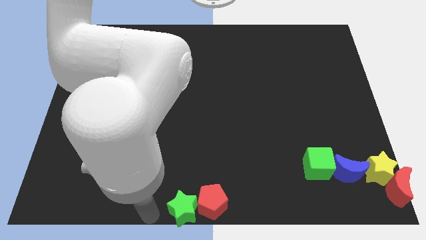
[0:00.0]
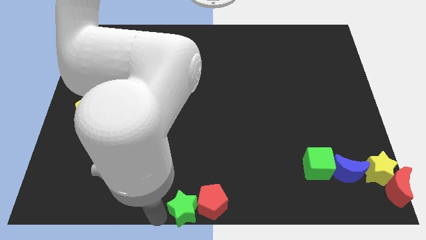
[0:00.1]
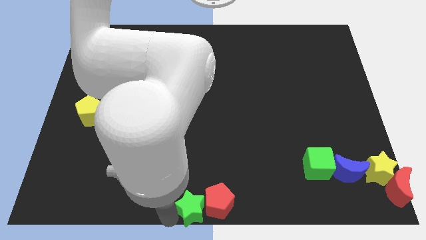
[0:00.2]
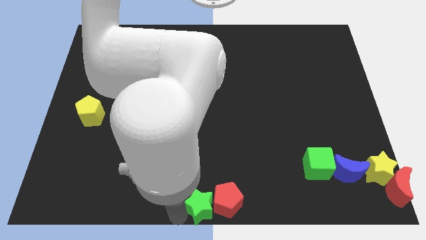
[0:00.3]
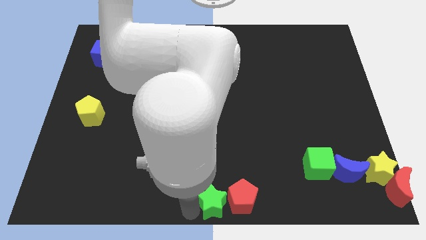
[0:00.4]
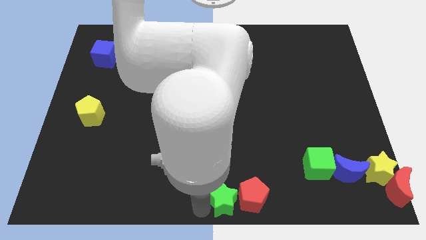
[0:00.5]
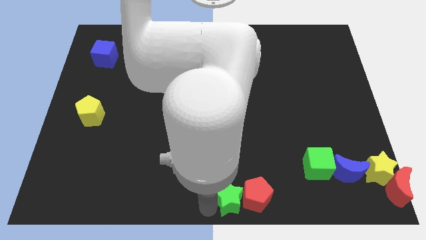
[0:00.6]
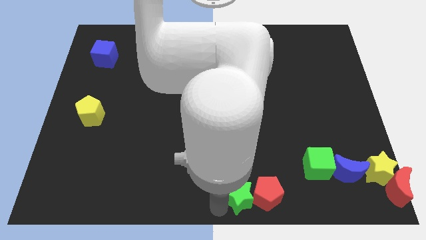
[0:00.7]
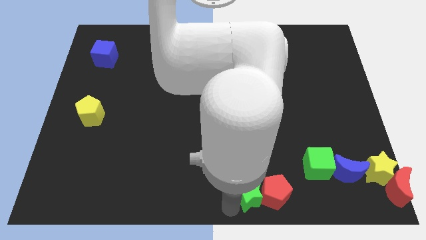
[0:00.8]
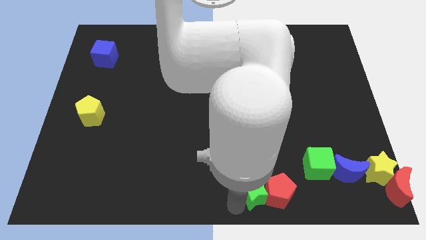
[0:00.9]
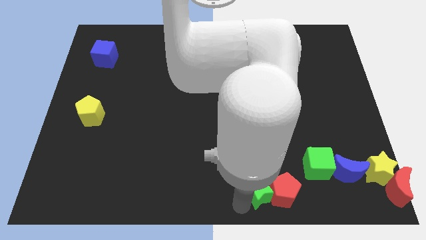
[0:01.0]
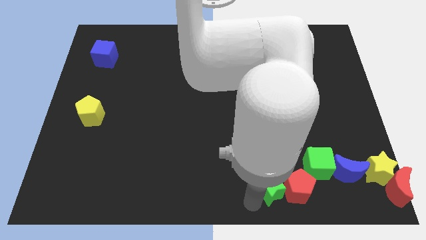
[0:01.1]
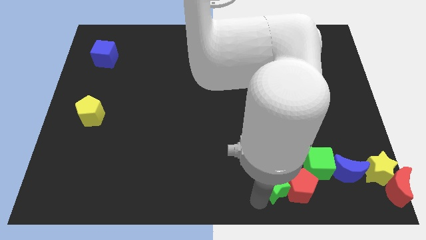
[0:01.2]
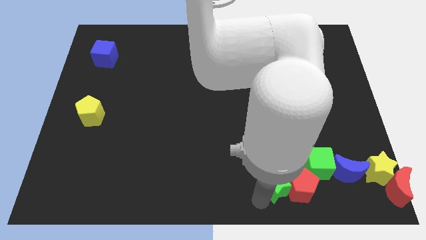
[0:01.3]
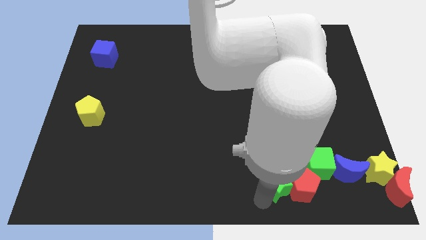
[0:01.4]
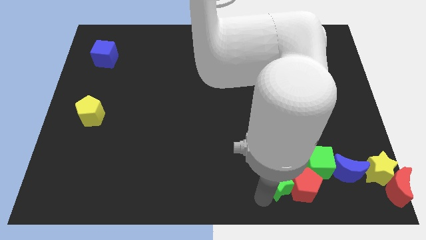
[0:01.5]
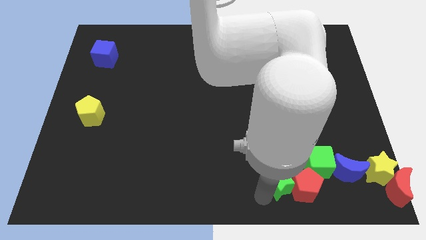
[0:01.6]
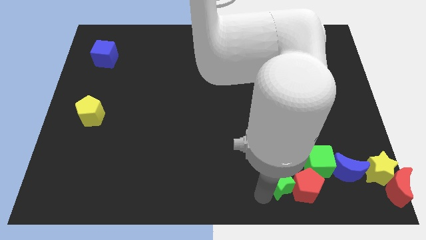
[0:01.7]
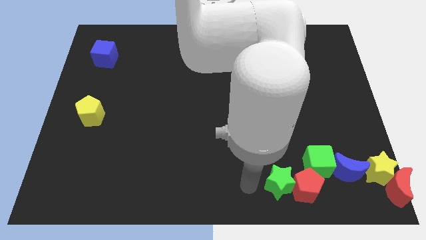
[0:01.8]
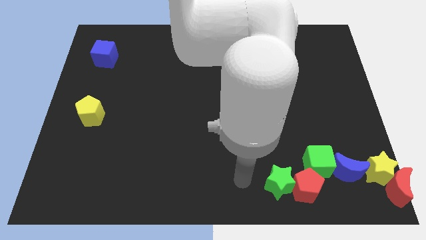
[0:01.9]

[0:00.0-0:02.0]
push the green star and red pentagon to the left of green cube

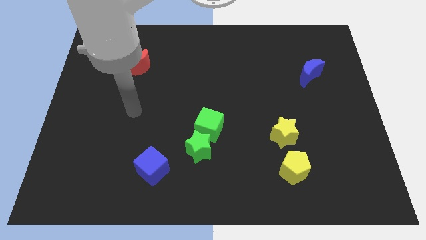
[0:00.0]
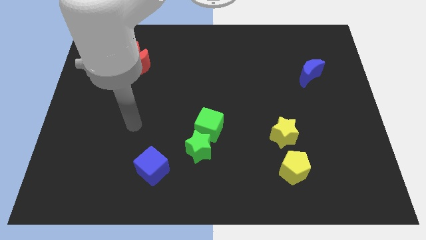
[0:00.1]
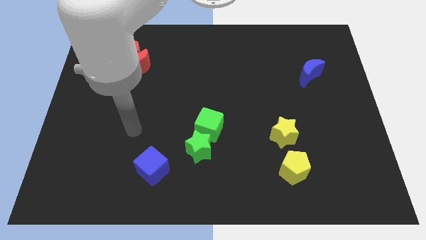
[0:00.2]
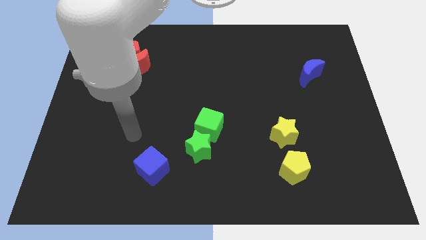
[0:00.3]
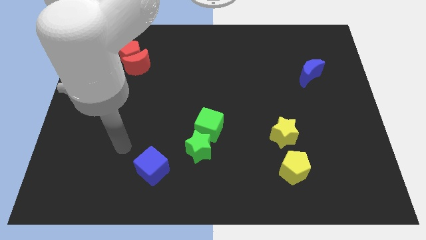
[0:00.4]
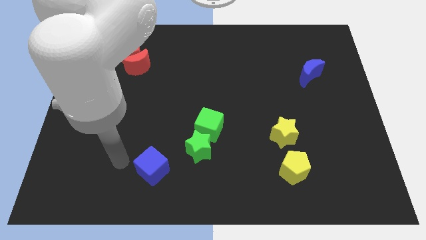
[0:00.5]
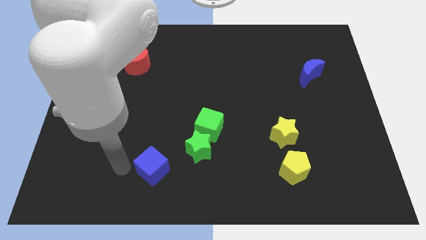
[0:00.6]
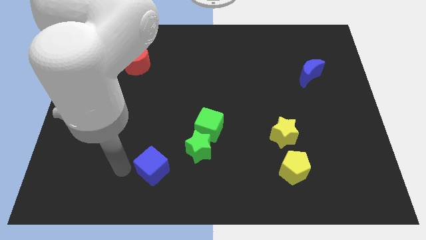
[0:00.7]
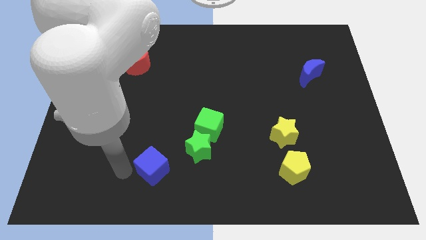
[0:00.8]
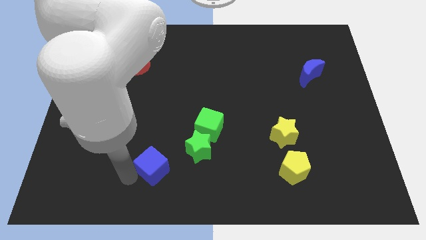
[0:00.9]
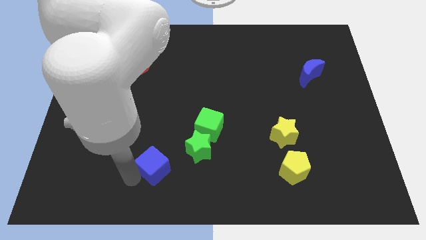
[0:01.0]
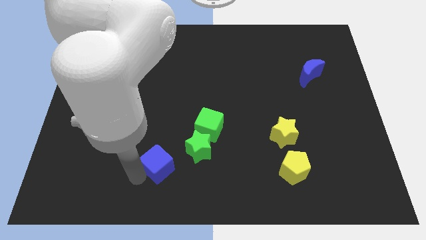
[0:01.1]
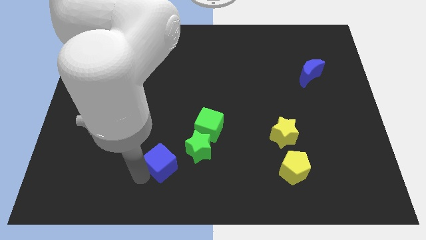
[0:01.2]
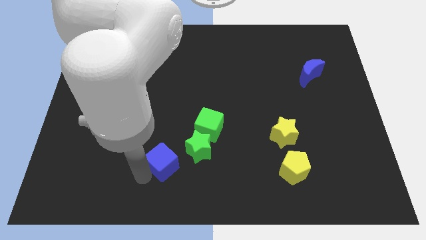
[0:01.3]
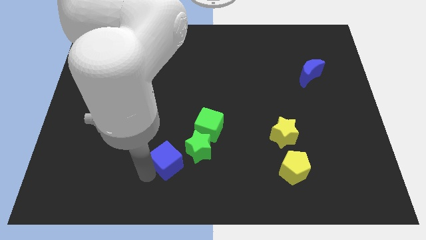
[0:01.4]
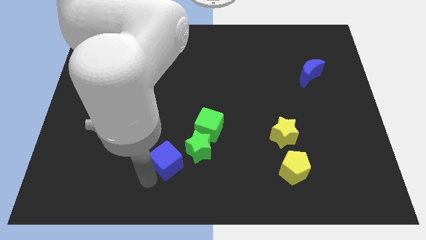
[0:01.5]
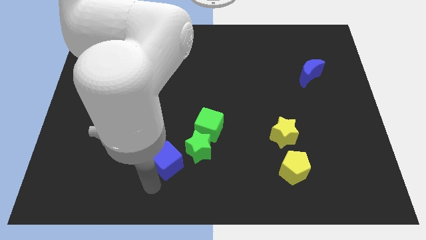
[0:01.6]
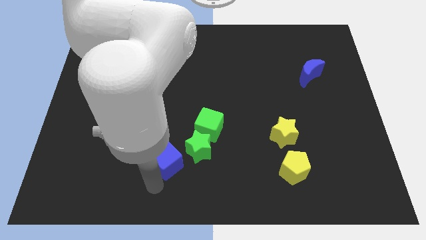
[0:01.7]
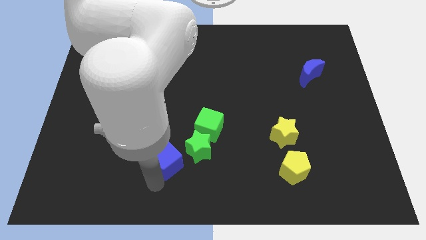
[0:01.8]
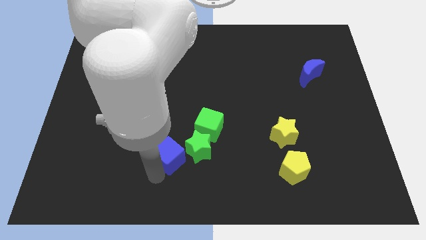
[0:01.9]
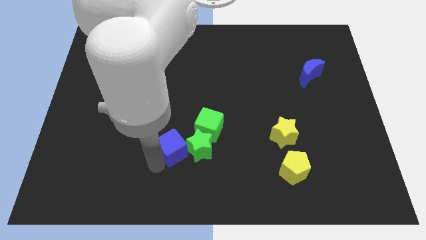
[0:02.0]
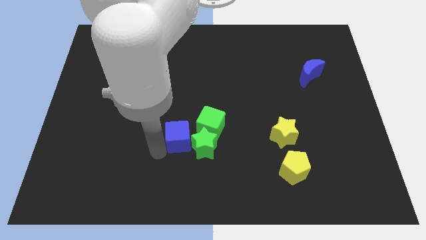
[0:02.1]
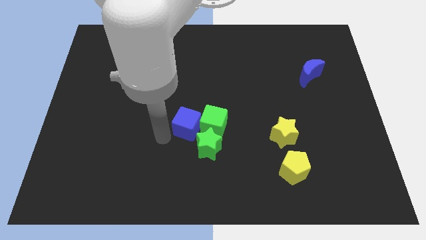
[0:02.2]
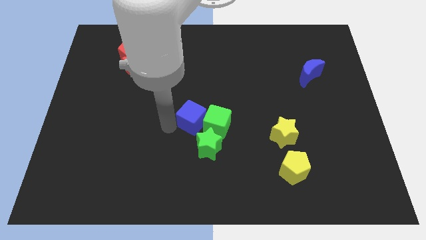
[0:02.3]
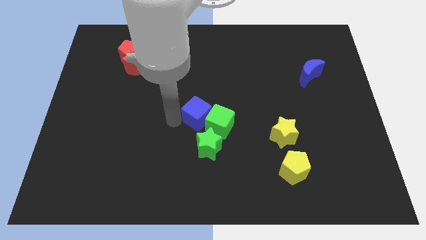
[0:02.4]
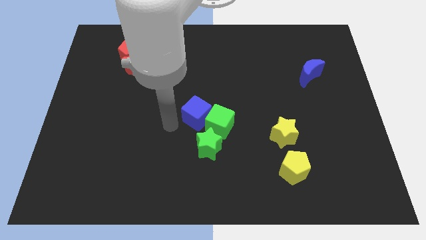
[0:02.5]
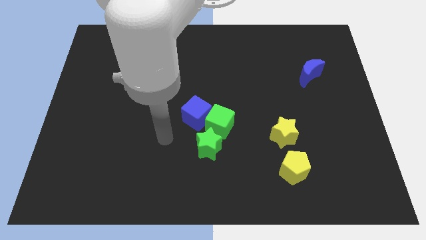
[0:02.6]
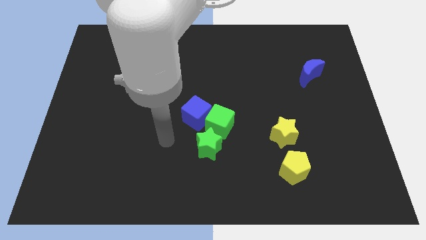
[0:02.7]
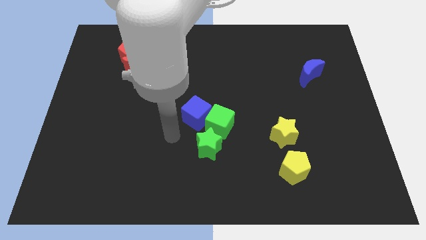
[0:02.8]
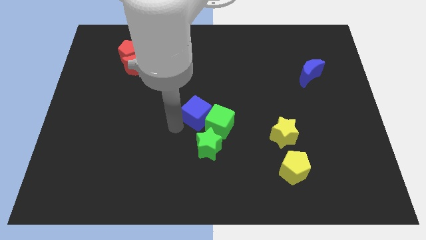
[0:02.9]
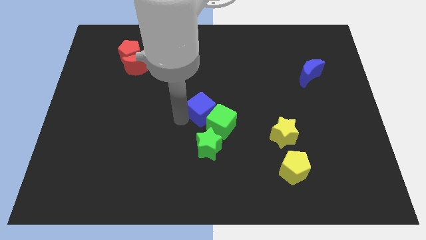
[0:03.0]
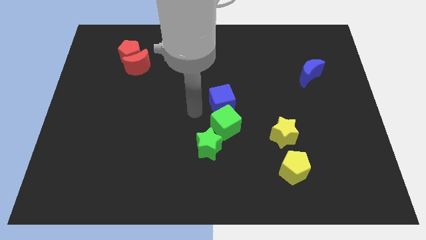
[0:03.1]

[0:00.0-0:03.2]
push blue cube into the green cube

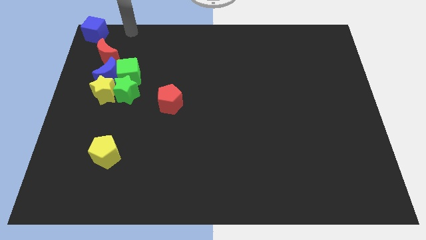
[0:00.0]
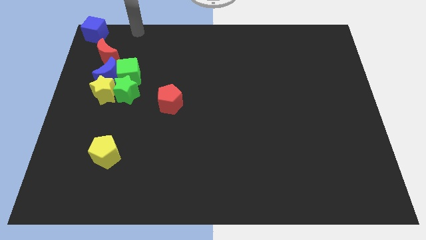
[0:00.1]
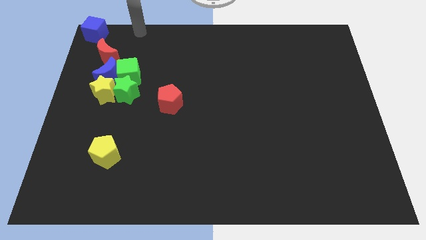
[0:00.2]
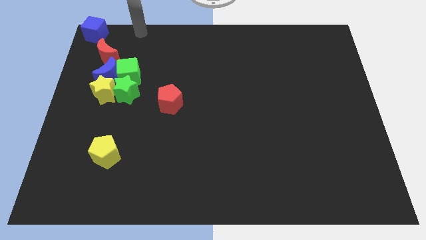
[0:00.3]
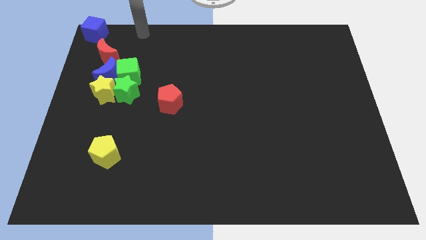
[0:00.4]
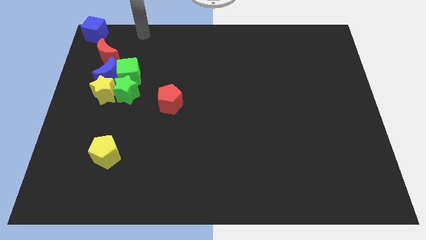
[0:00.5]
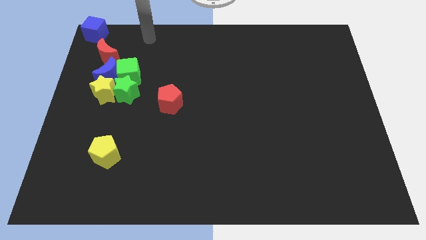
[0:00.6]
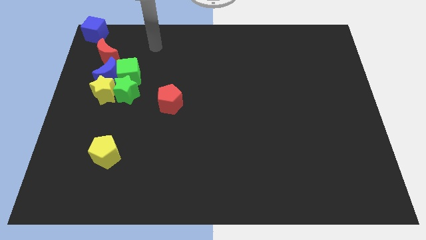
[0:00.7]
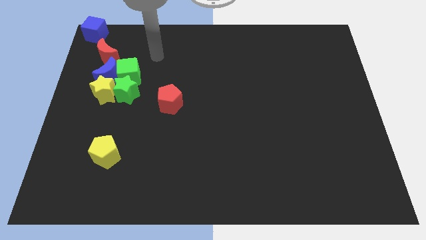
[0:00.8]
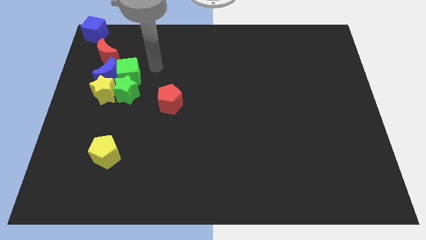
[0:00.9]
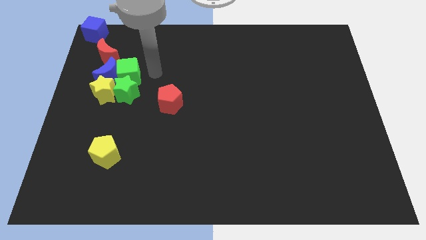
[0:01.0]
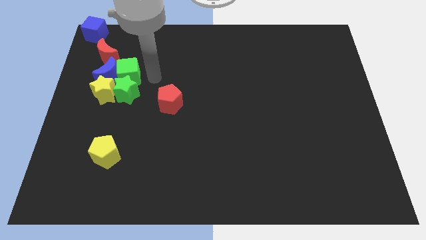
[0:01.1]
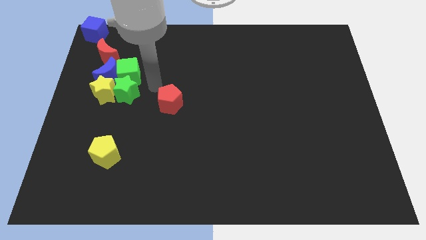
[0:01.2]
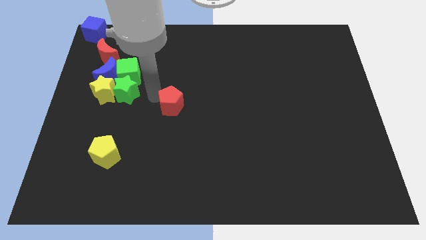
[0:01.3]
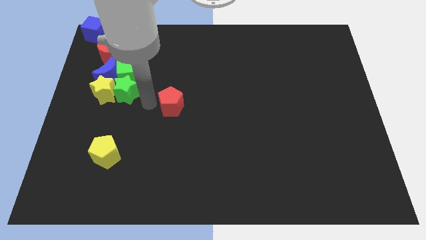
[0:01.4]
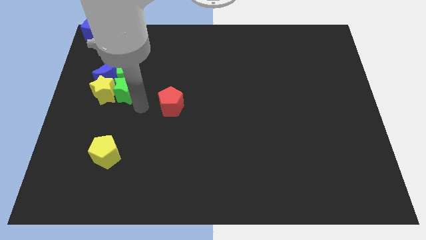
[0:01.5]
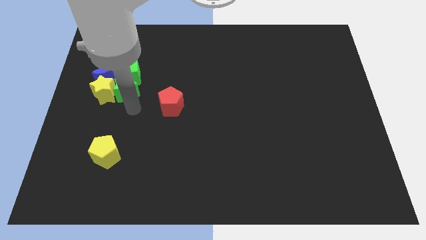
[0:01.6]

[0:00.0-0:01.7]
touch your arm to the left of red pentagon

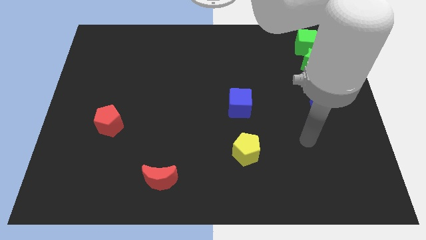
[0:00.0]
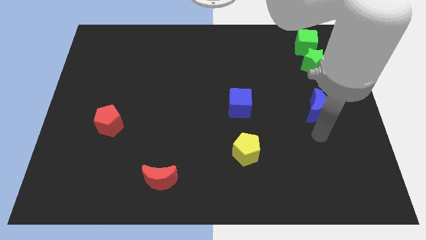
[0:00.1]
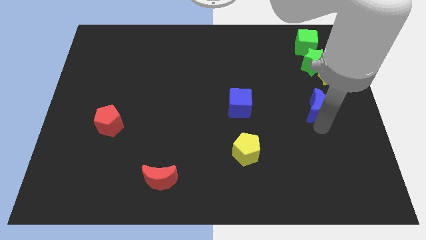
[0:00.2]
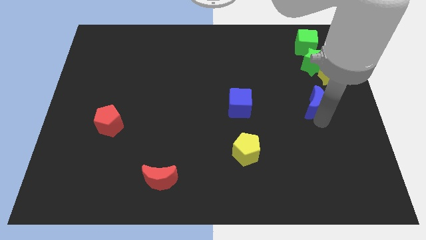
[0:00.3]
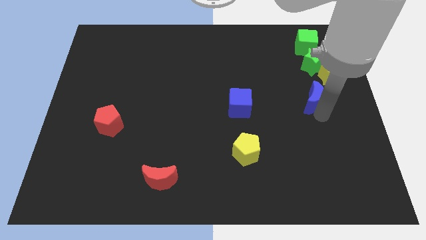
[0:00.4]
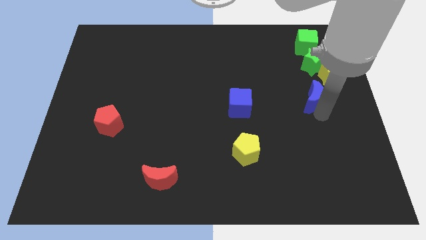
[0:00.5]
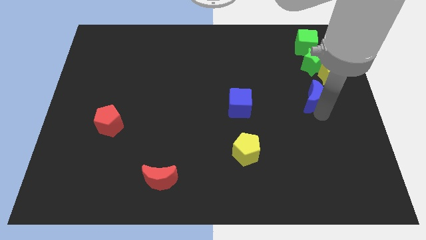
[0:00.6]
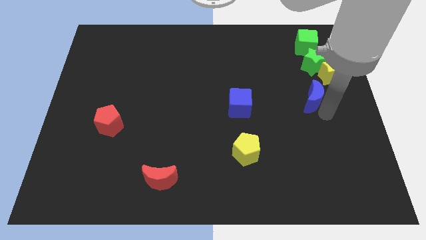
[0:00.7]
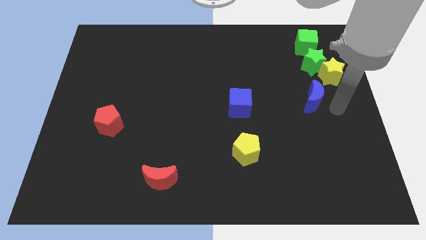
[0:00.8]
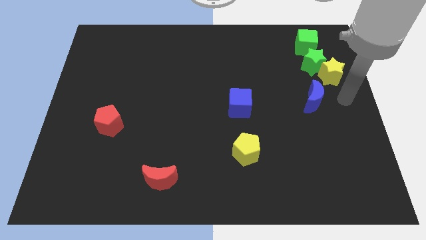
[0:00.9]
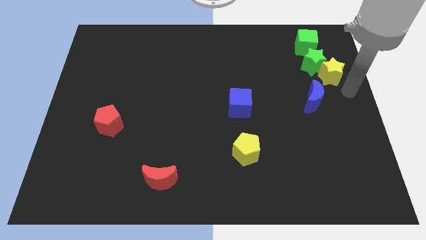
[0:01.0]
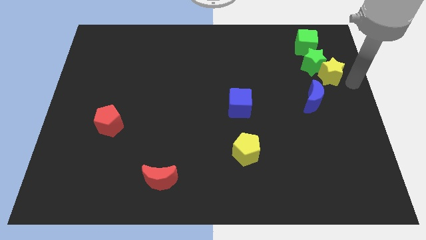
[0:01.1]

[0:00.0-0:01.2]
move the blue crescent slightly upwards

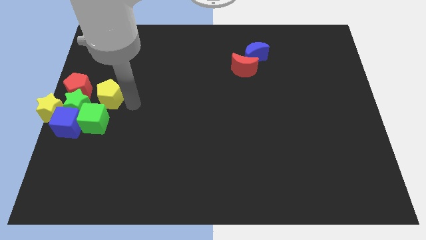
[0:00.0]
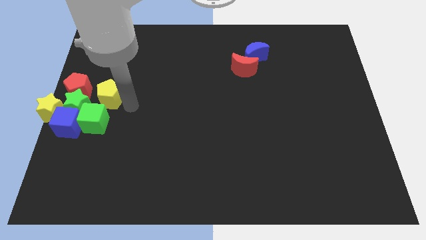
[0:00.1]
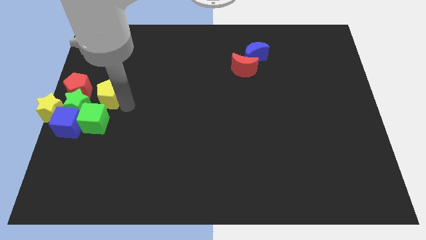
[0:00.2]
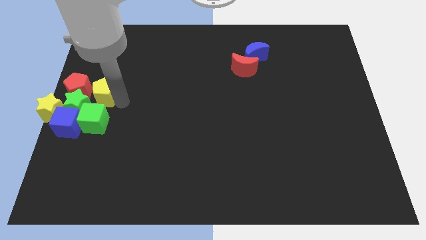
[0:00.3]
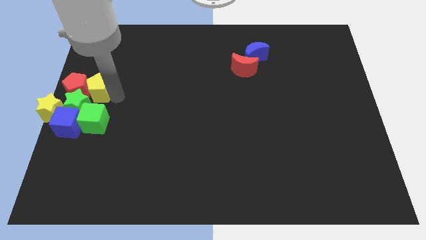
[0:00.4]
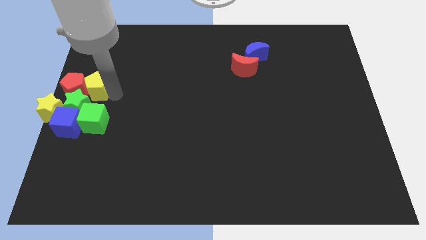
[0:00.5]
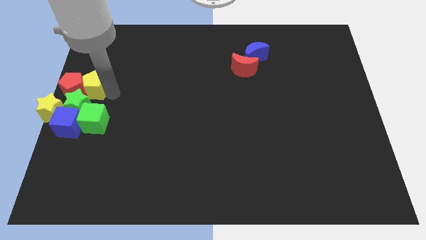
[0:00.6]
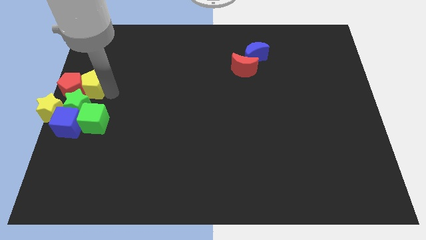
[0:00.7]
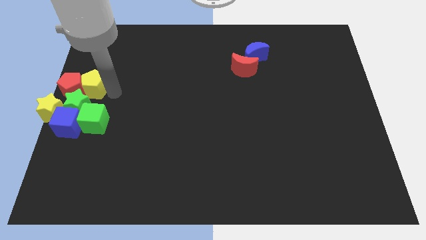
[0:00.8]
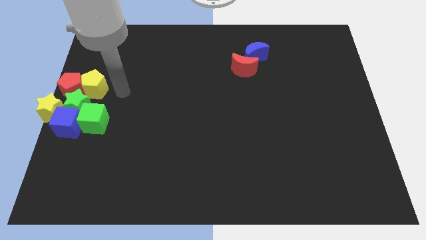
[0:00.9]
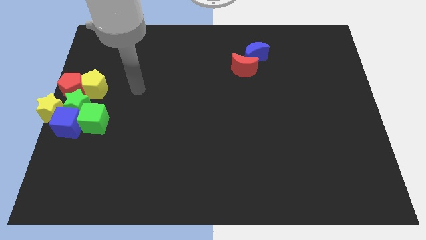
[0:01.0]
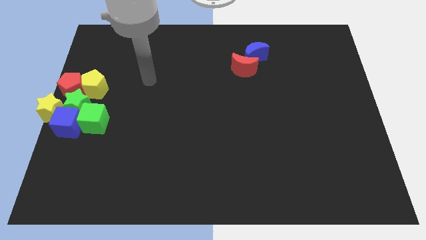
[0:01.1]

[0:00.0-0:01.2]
drag the yellow pentagon into the red pentagon
